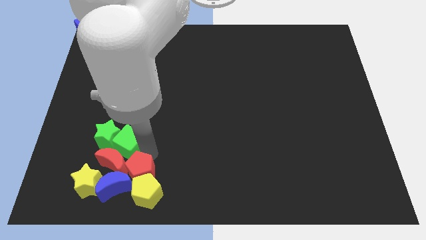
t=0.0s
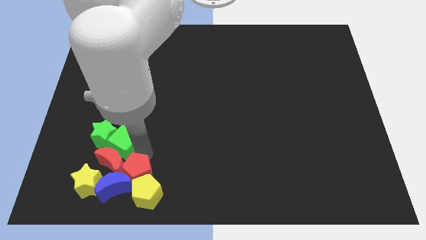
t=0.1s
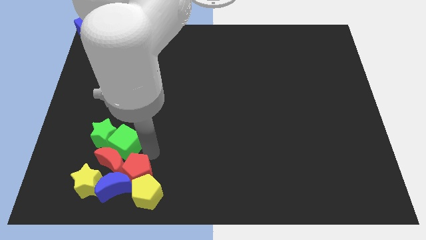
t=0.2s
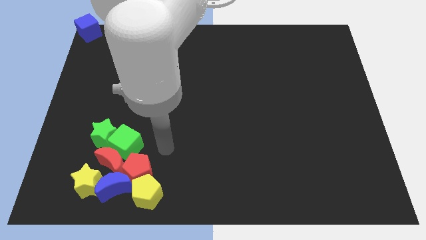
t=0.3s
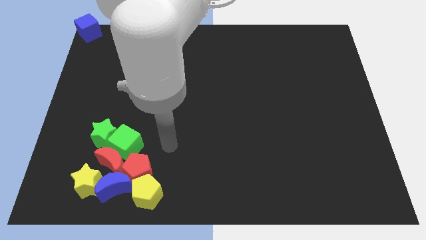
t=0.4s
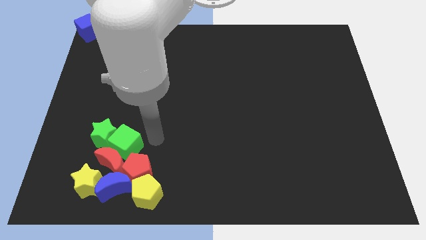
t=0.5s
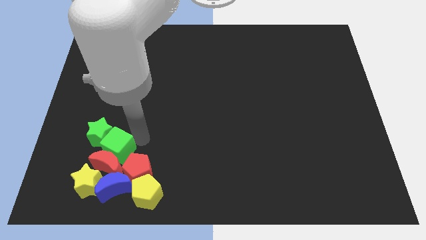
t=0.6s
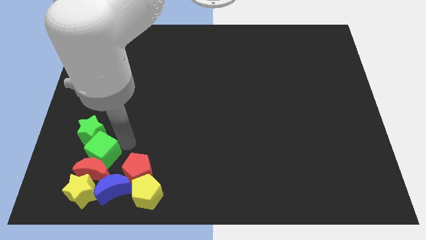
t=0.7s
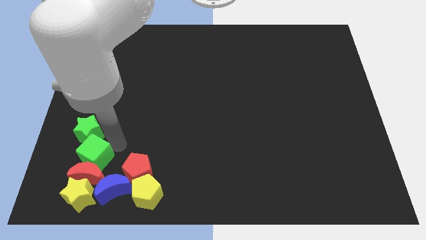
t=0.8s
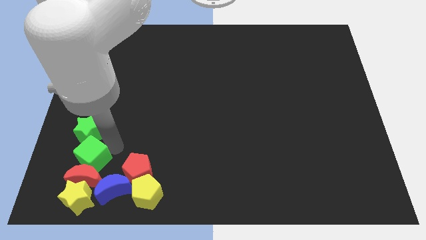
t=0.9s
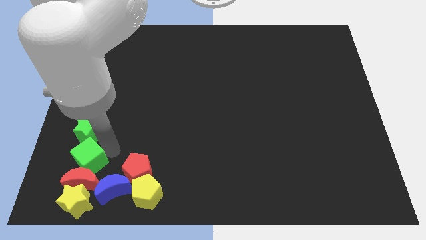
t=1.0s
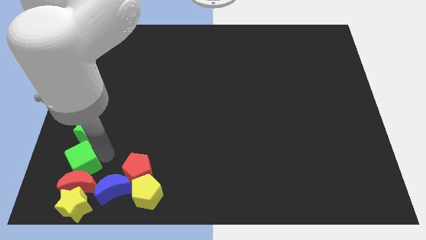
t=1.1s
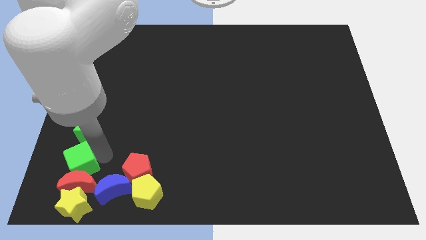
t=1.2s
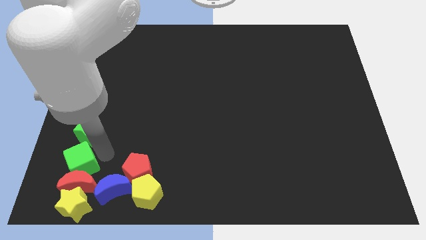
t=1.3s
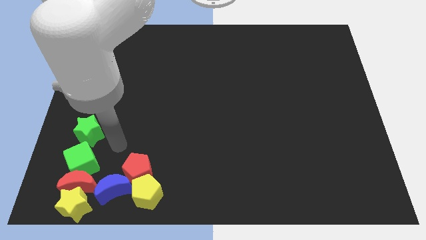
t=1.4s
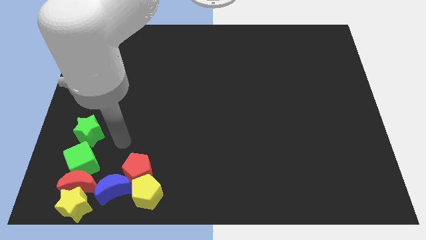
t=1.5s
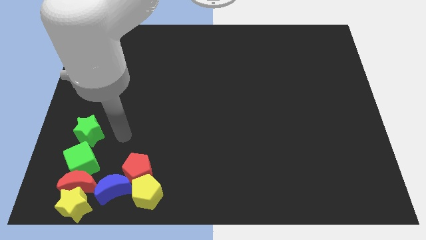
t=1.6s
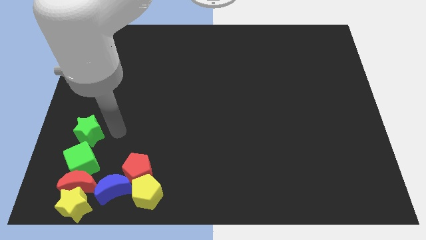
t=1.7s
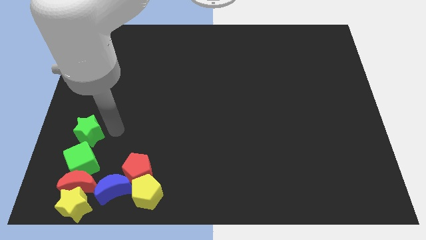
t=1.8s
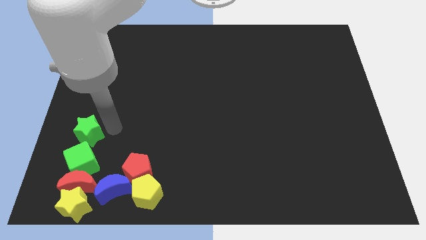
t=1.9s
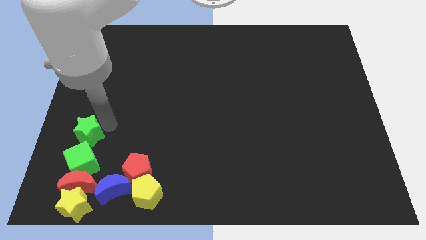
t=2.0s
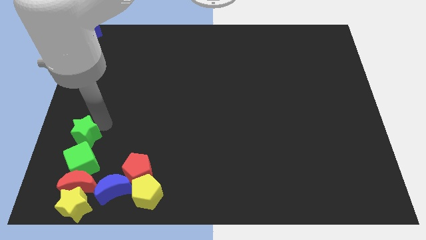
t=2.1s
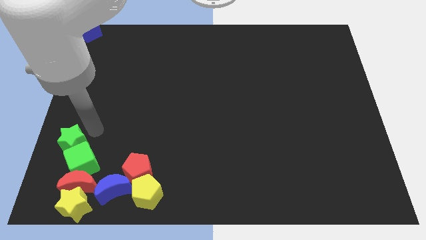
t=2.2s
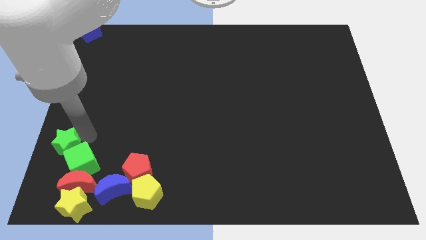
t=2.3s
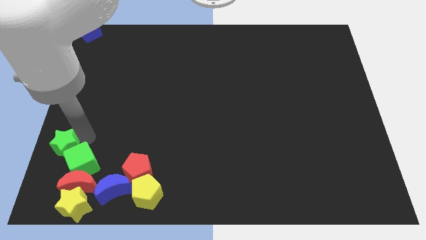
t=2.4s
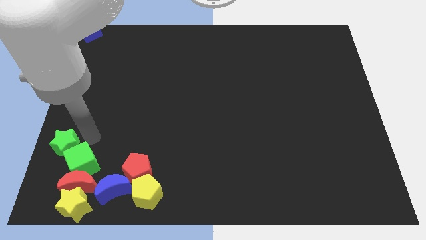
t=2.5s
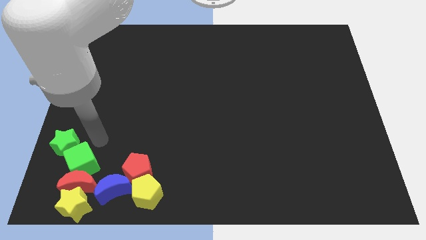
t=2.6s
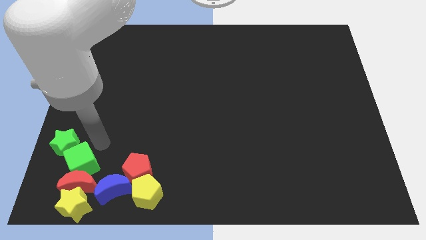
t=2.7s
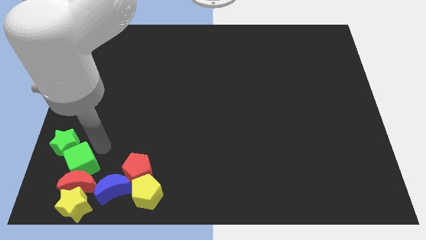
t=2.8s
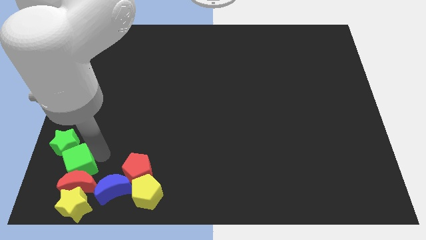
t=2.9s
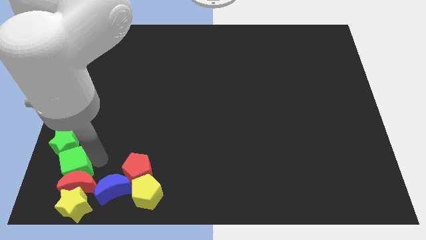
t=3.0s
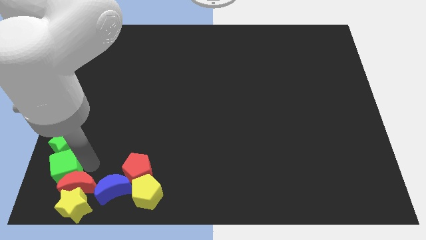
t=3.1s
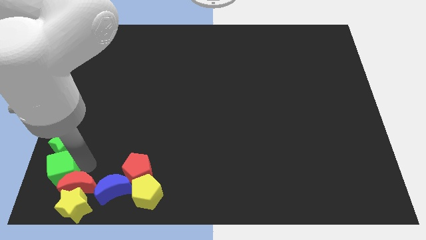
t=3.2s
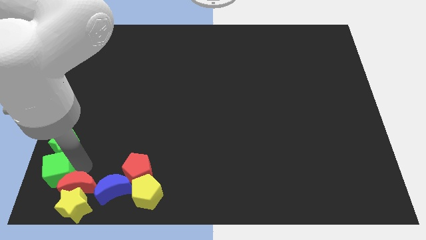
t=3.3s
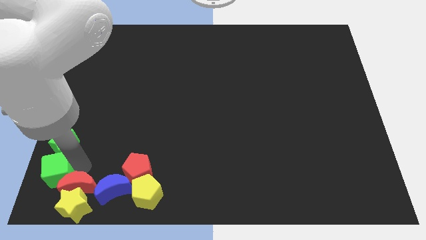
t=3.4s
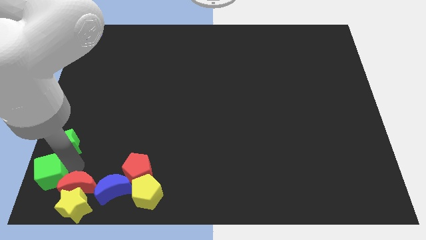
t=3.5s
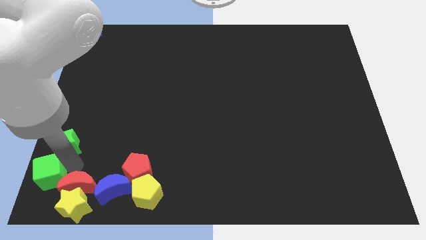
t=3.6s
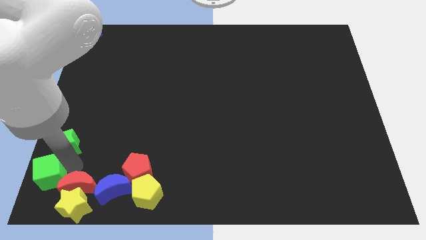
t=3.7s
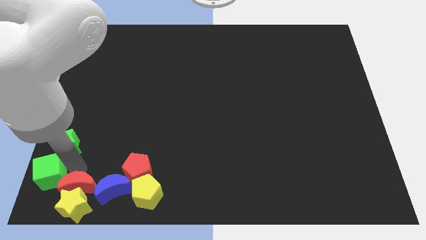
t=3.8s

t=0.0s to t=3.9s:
slide the green blocks towards left

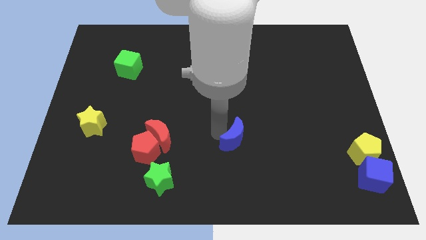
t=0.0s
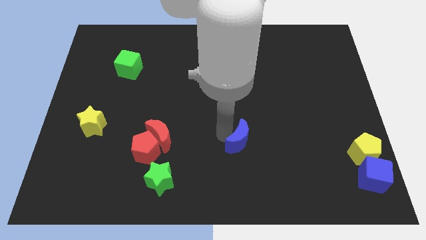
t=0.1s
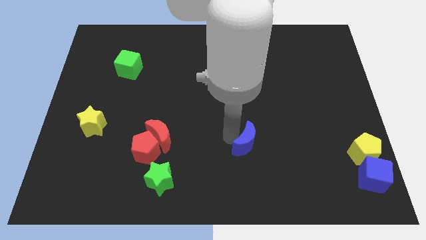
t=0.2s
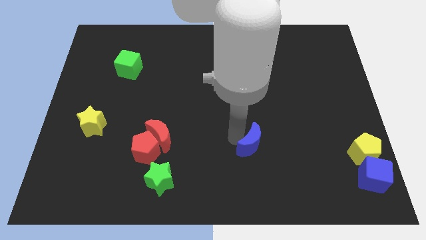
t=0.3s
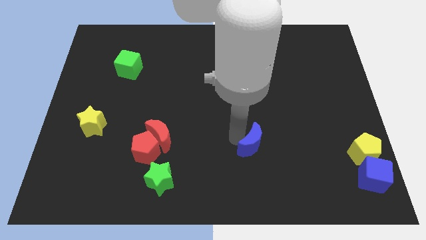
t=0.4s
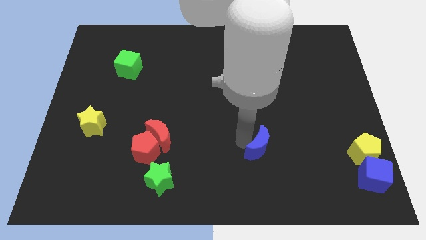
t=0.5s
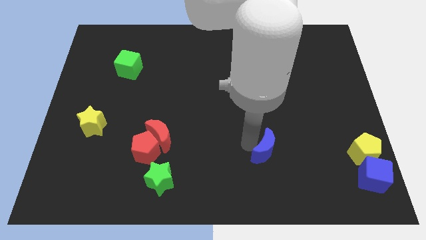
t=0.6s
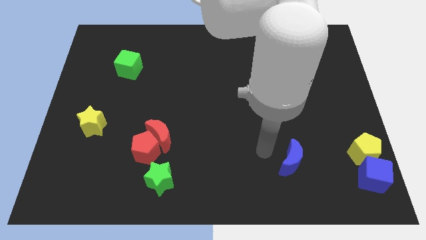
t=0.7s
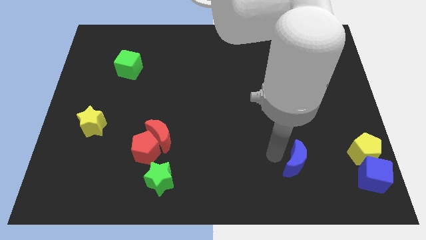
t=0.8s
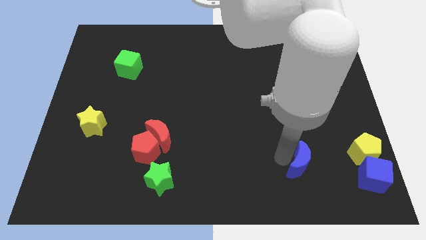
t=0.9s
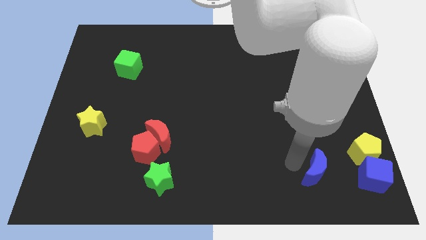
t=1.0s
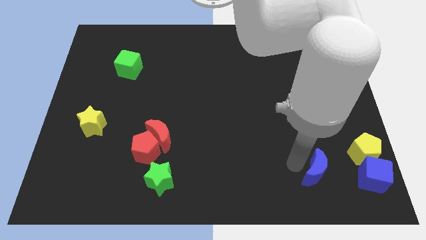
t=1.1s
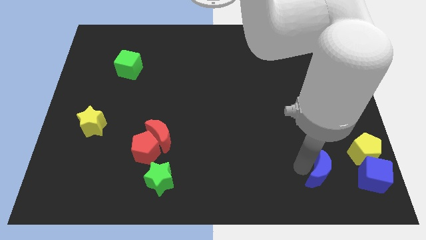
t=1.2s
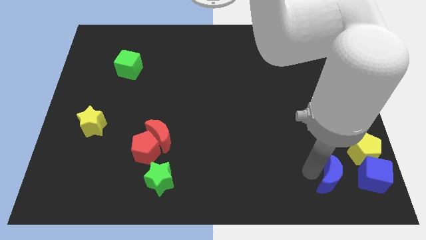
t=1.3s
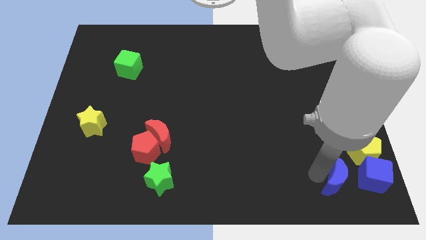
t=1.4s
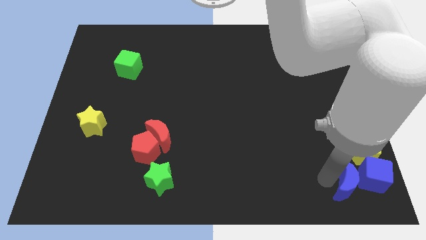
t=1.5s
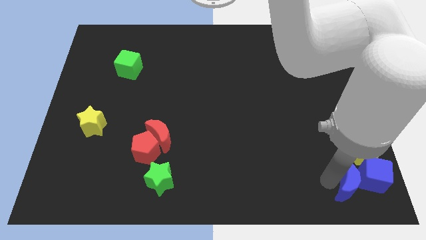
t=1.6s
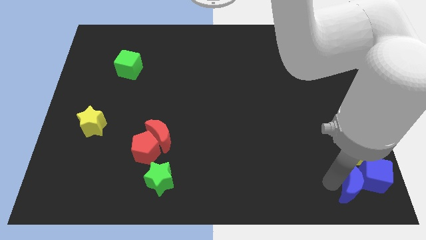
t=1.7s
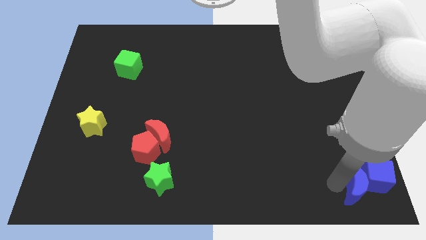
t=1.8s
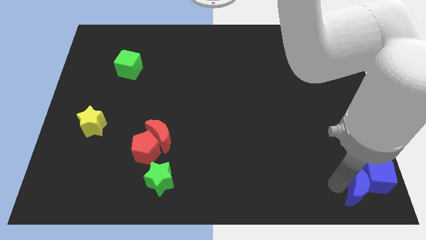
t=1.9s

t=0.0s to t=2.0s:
move blue crescent near to blue cube

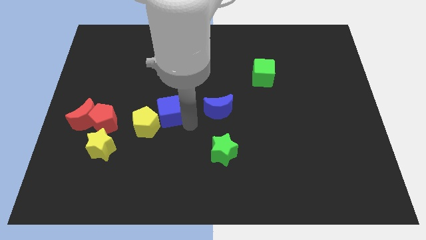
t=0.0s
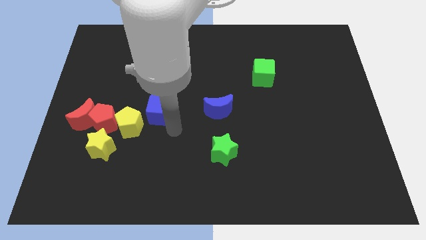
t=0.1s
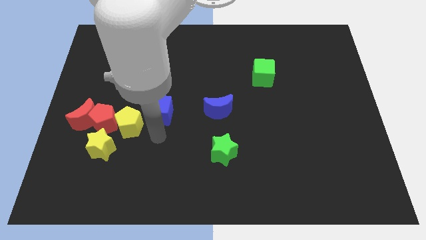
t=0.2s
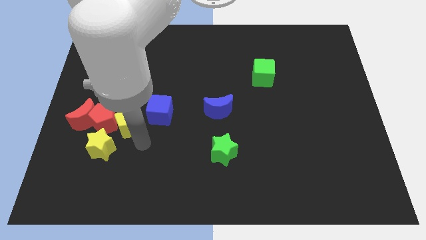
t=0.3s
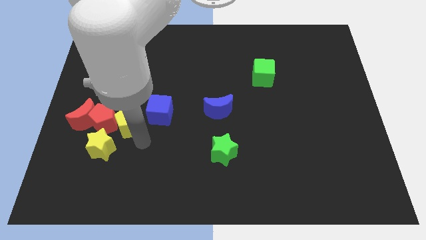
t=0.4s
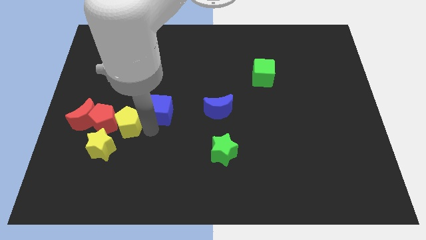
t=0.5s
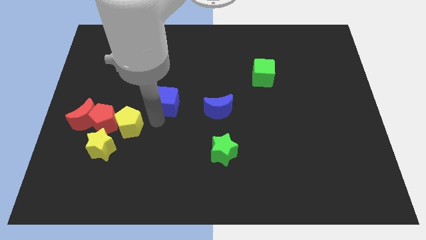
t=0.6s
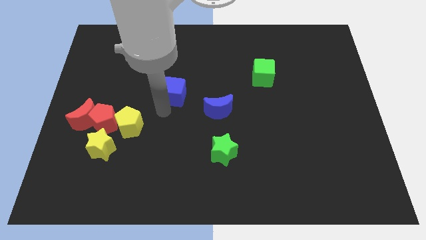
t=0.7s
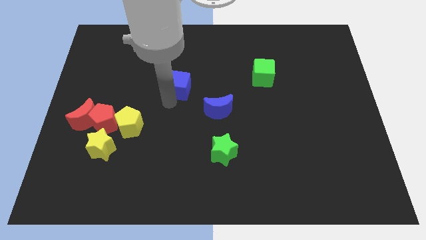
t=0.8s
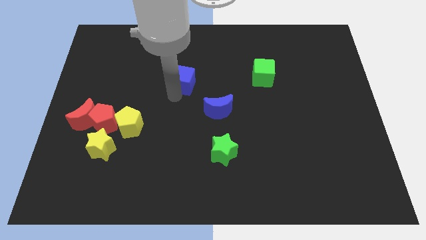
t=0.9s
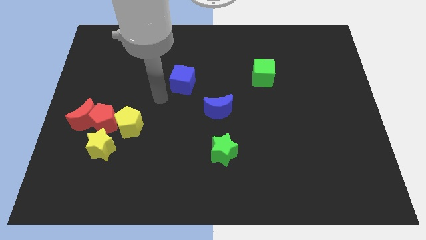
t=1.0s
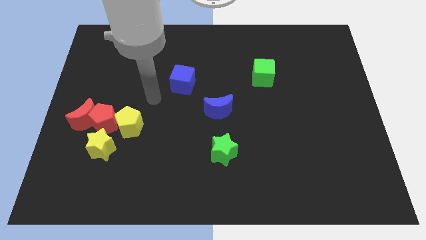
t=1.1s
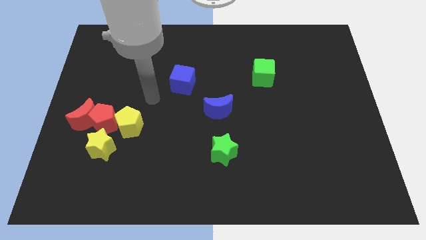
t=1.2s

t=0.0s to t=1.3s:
push the blue cube up slightly

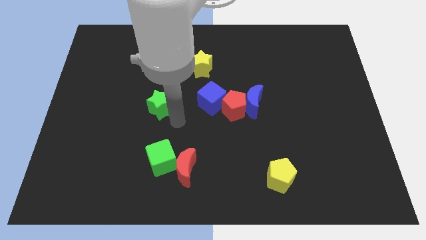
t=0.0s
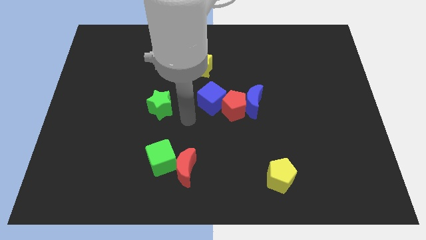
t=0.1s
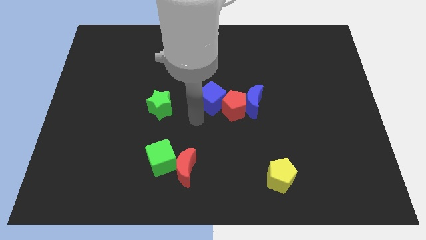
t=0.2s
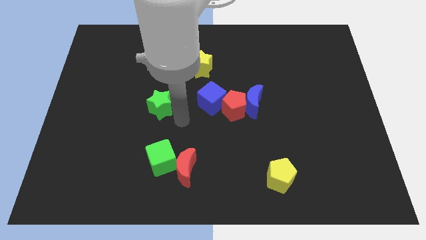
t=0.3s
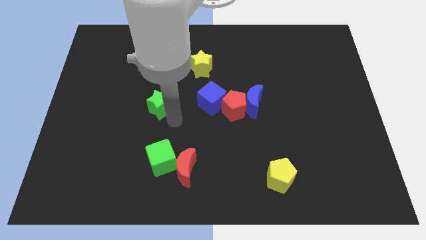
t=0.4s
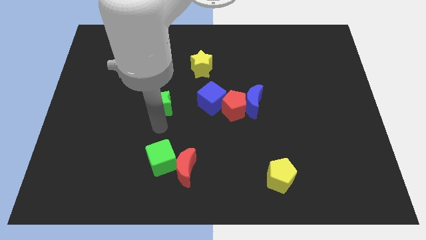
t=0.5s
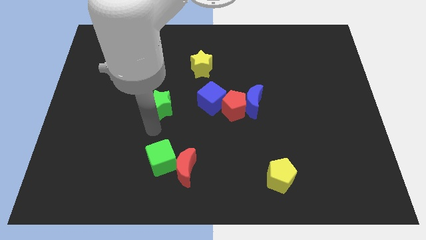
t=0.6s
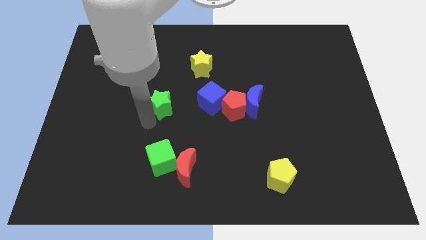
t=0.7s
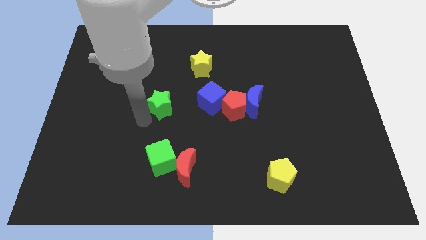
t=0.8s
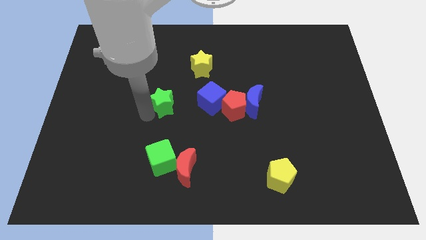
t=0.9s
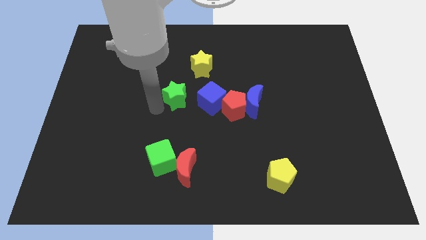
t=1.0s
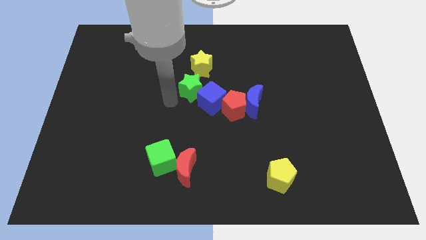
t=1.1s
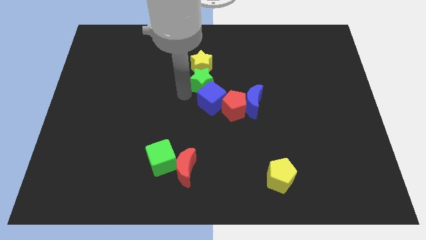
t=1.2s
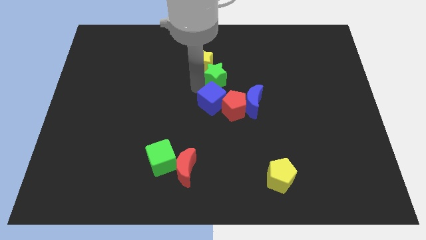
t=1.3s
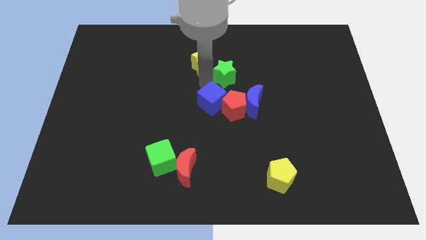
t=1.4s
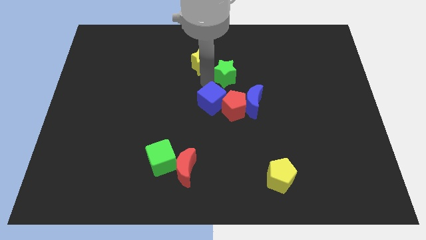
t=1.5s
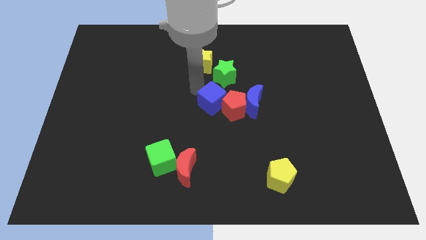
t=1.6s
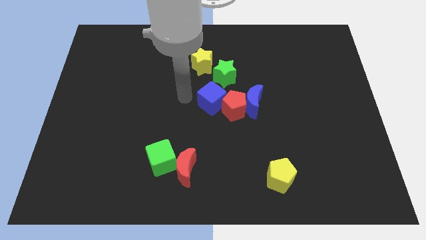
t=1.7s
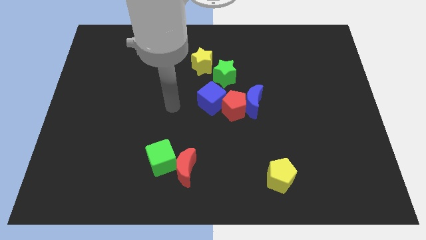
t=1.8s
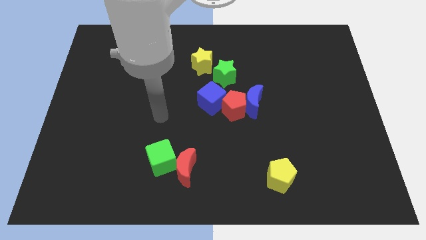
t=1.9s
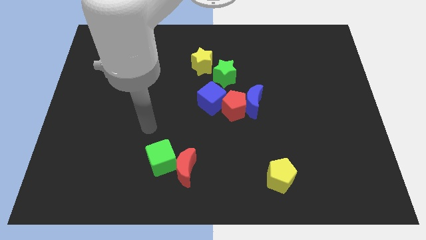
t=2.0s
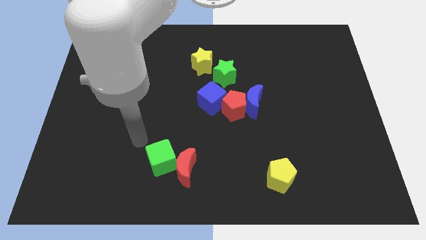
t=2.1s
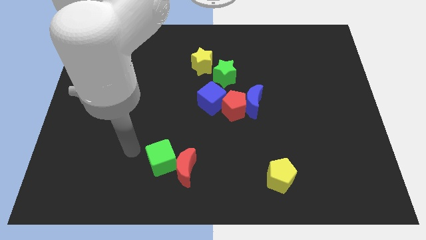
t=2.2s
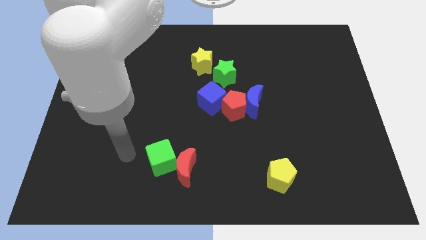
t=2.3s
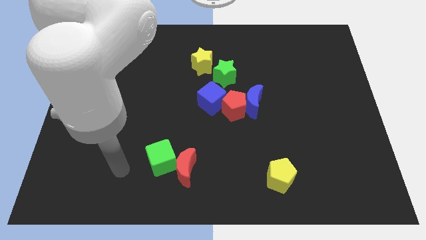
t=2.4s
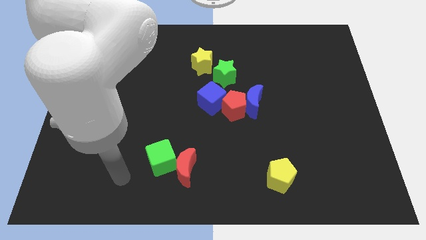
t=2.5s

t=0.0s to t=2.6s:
move green star above blue cube
